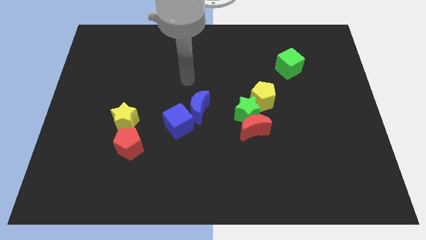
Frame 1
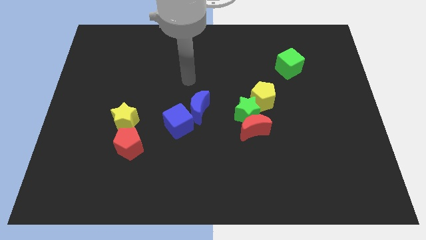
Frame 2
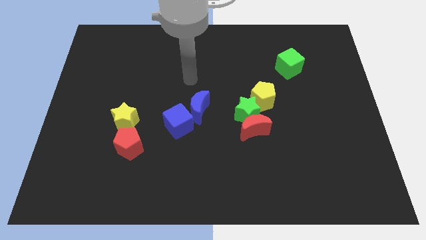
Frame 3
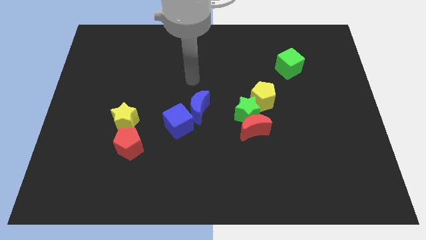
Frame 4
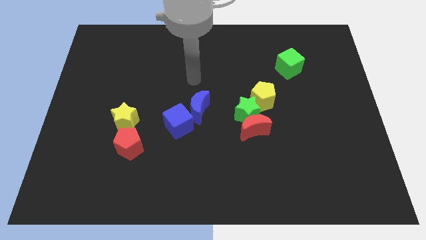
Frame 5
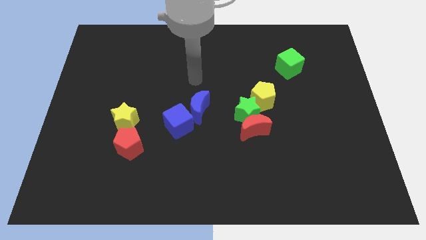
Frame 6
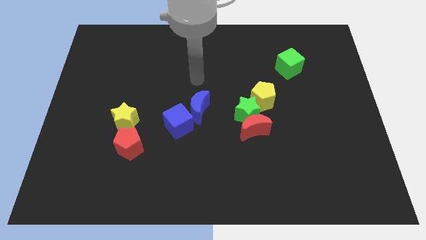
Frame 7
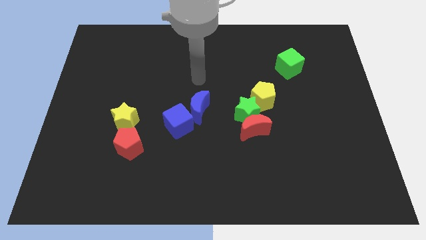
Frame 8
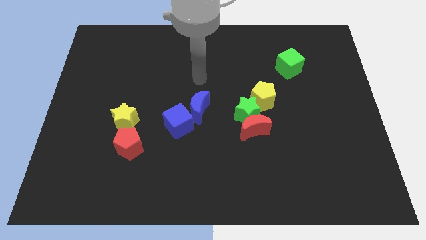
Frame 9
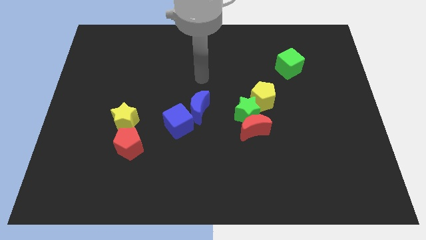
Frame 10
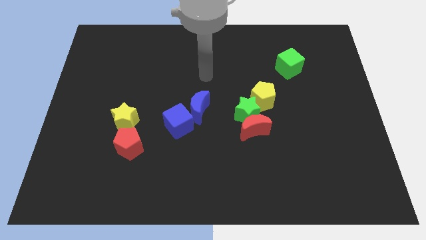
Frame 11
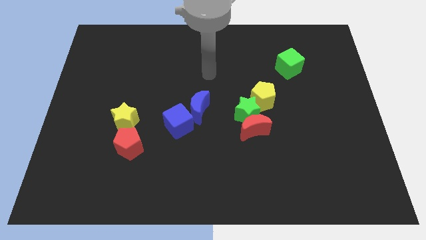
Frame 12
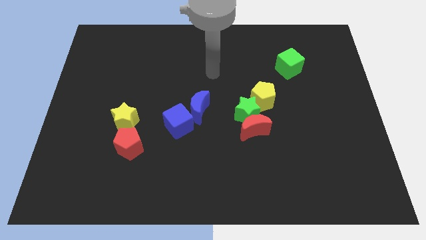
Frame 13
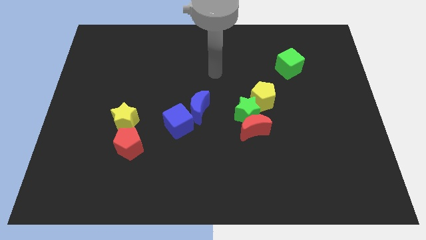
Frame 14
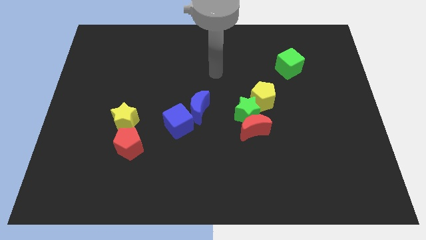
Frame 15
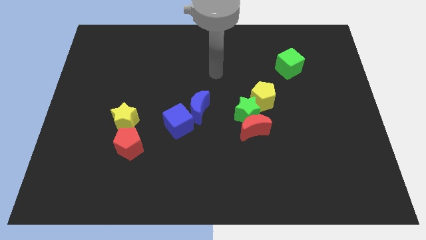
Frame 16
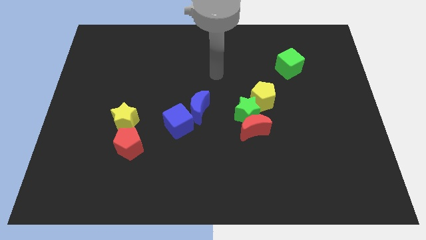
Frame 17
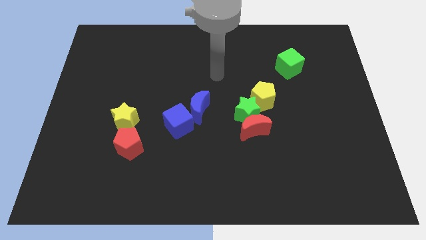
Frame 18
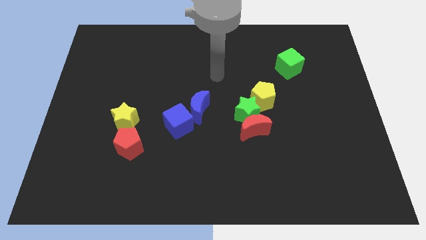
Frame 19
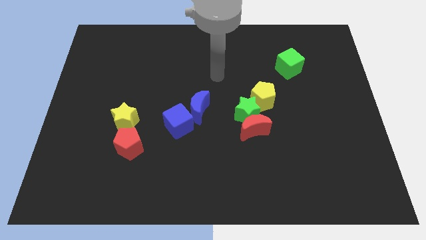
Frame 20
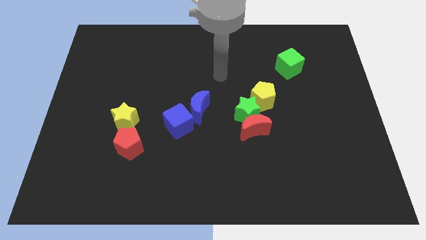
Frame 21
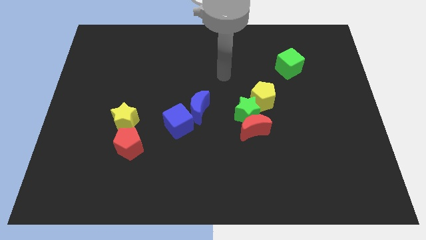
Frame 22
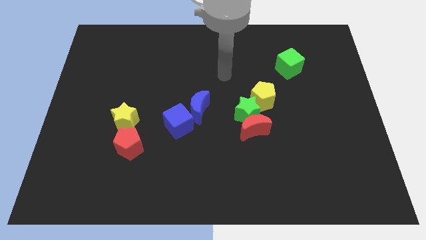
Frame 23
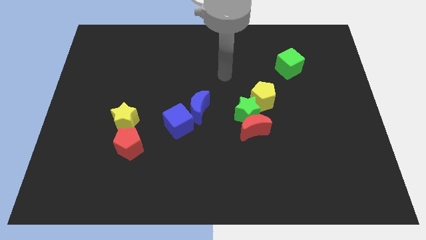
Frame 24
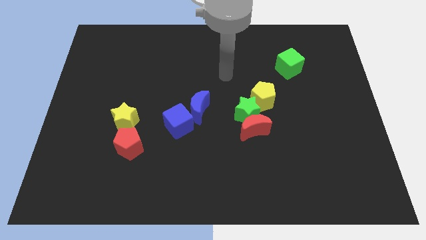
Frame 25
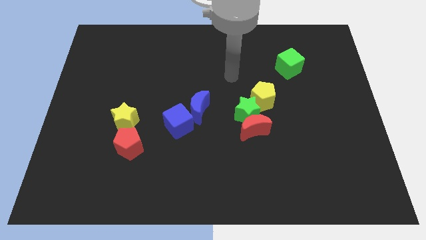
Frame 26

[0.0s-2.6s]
move robot arm towards right side

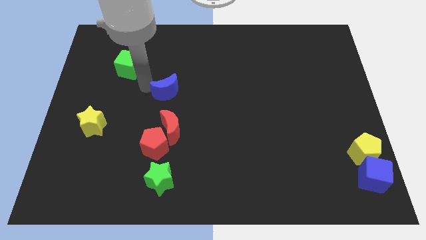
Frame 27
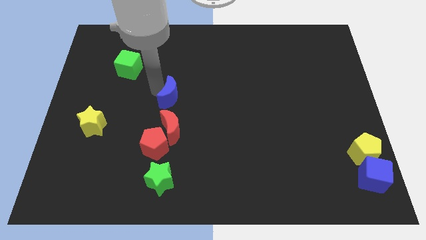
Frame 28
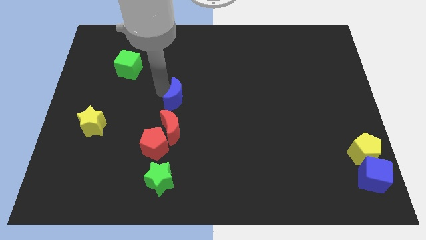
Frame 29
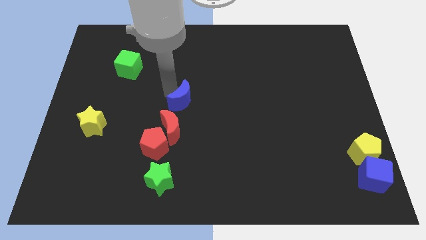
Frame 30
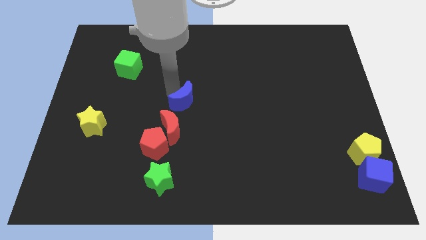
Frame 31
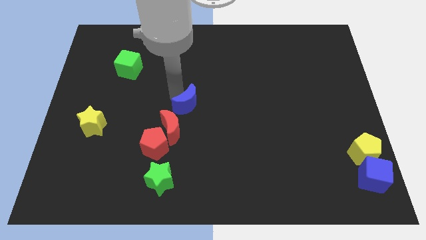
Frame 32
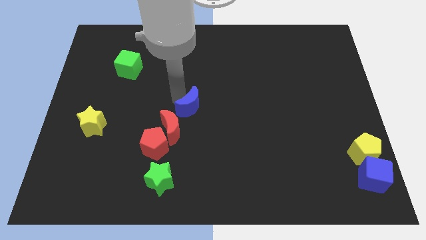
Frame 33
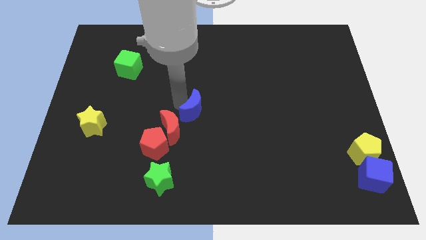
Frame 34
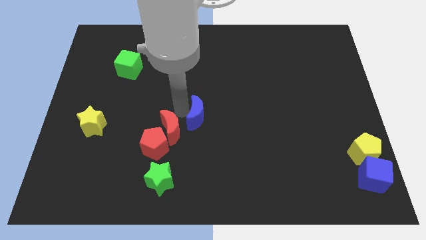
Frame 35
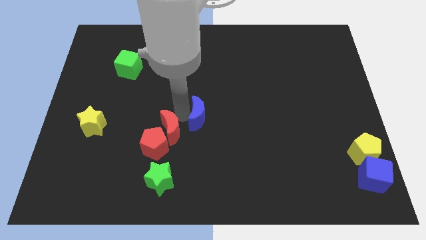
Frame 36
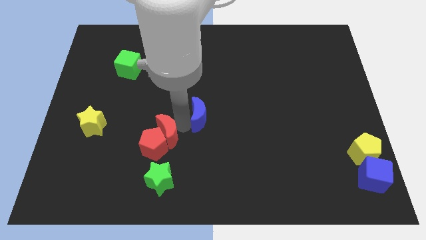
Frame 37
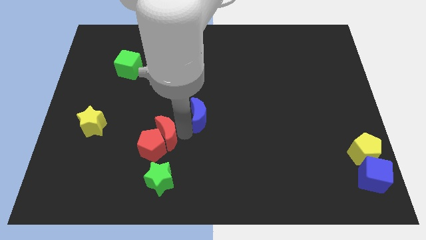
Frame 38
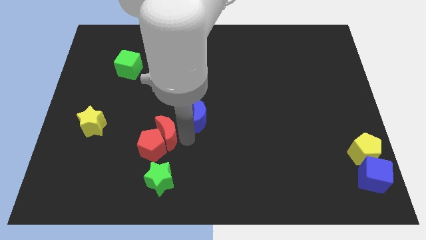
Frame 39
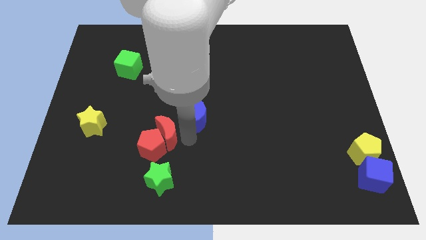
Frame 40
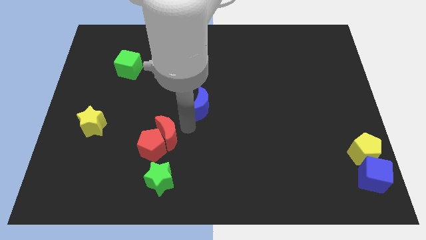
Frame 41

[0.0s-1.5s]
place blue crescent right to red crescent

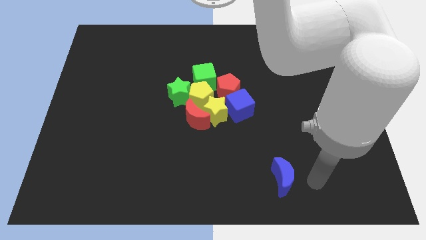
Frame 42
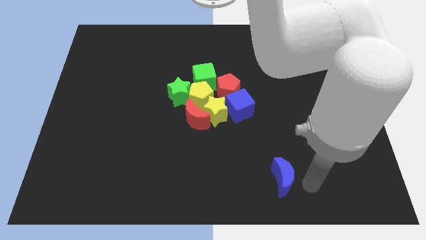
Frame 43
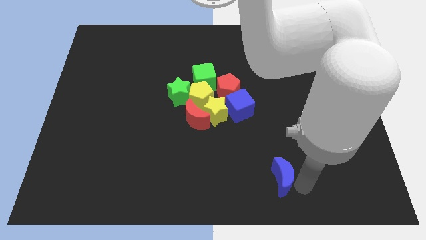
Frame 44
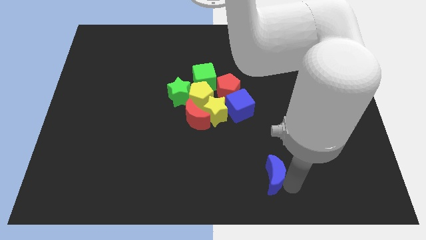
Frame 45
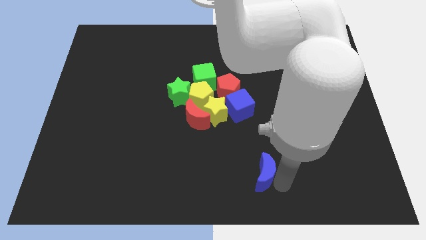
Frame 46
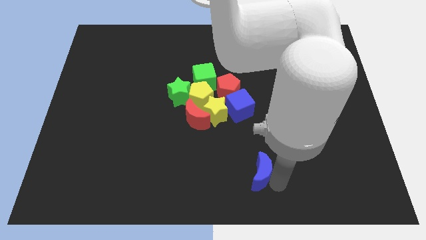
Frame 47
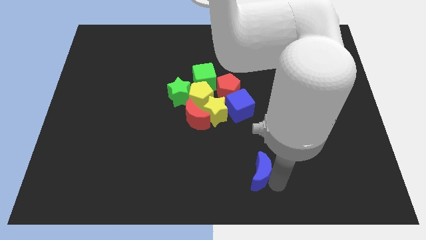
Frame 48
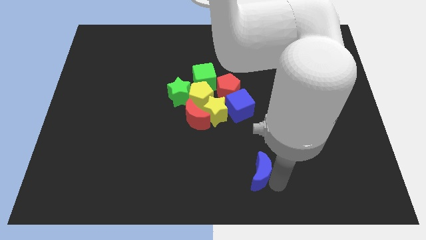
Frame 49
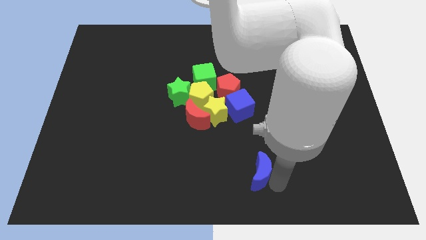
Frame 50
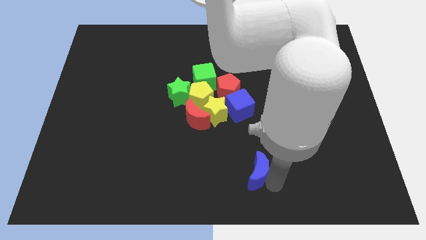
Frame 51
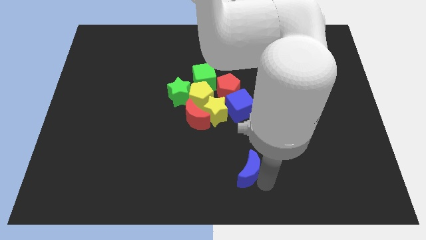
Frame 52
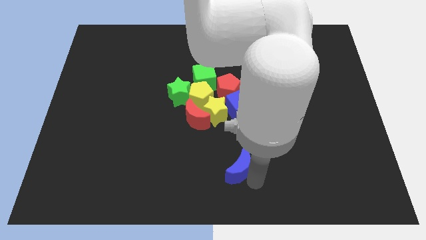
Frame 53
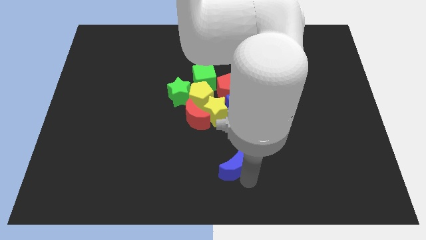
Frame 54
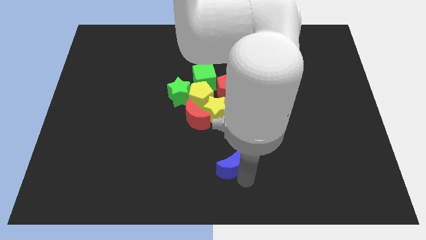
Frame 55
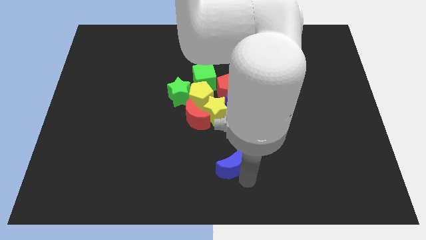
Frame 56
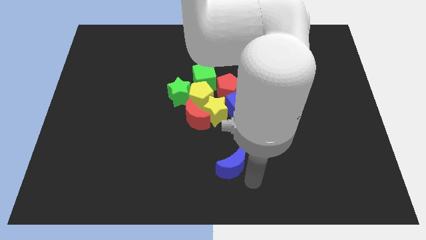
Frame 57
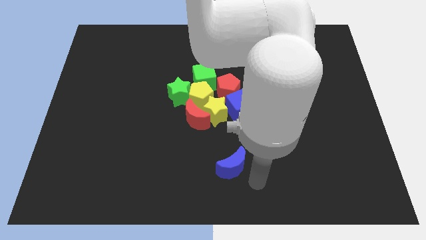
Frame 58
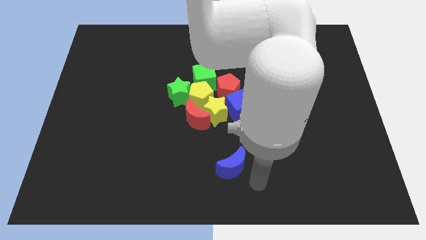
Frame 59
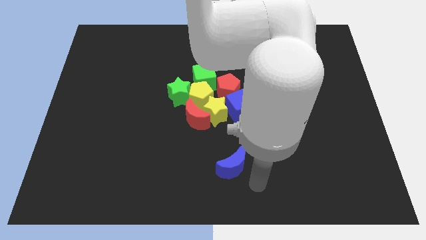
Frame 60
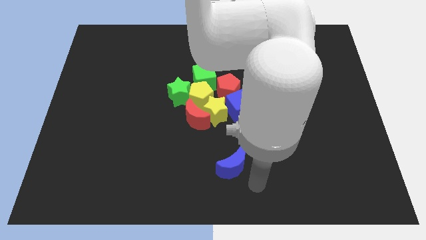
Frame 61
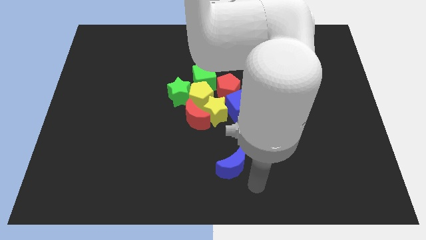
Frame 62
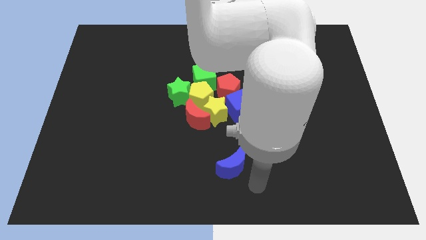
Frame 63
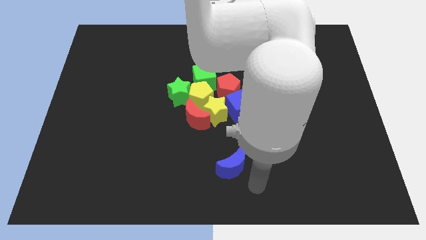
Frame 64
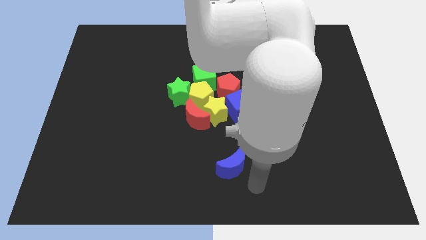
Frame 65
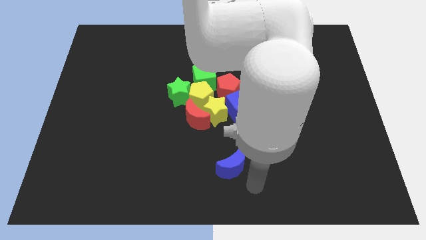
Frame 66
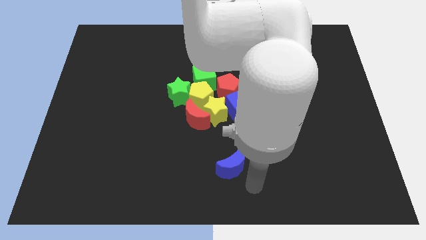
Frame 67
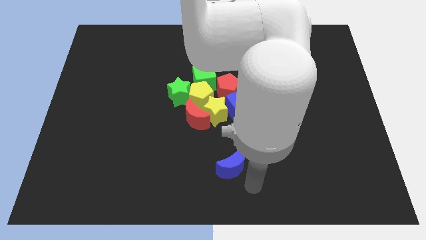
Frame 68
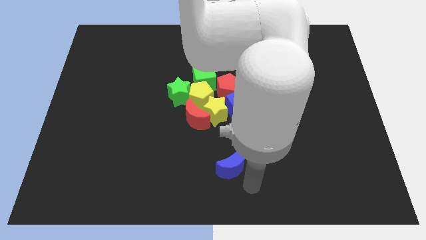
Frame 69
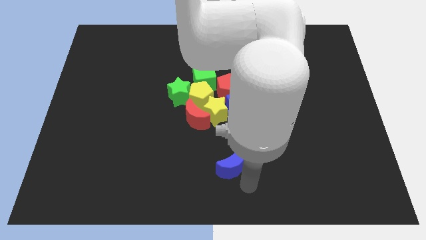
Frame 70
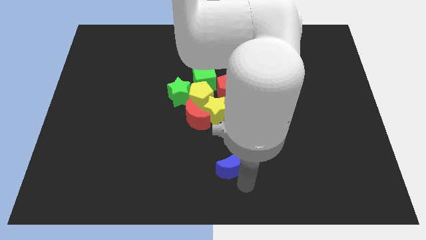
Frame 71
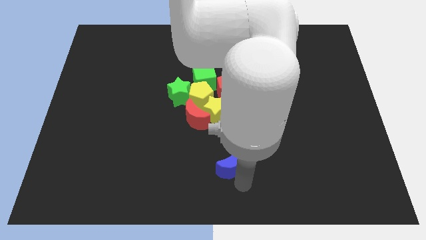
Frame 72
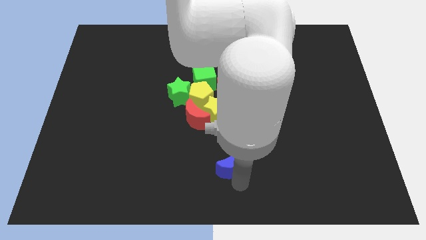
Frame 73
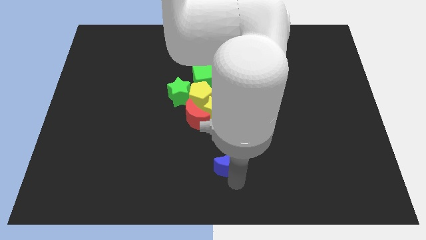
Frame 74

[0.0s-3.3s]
move the blue crescent vertically ti the bottom of the yellow star

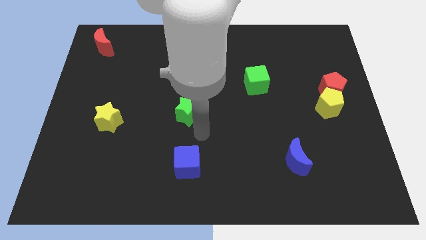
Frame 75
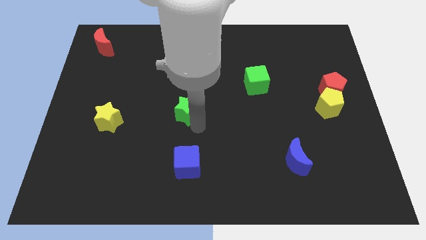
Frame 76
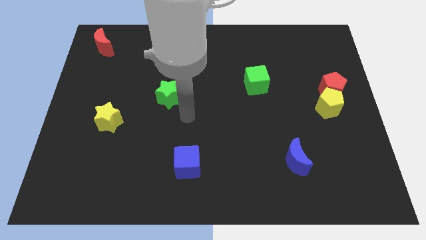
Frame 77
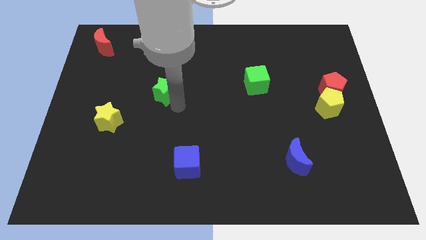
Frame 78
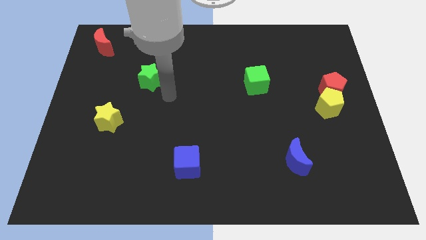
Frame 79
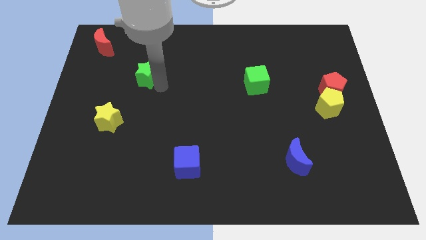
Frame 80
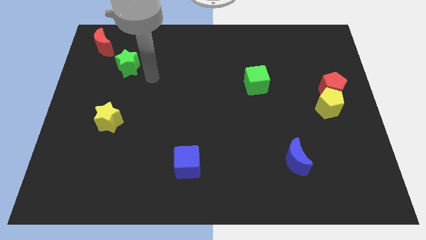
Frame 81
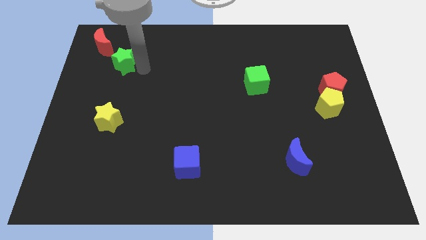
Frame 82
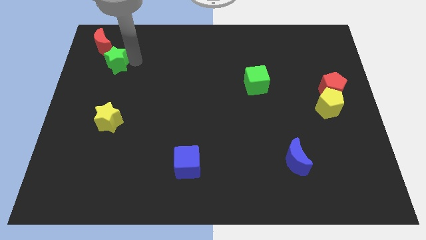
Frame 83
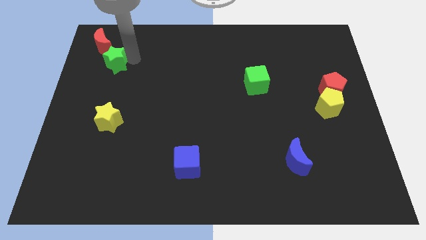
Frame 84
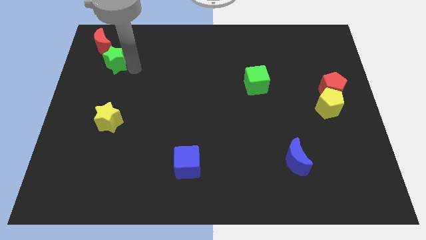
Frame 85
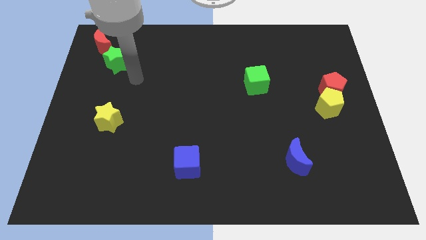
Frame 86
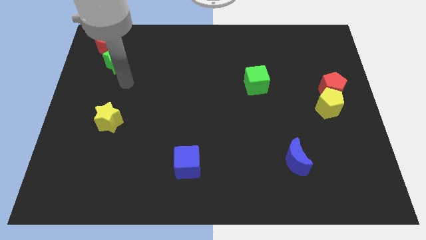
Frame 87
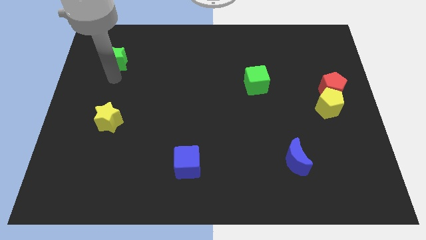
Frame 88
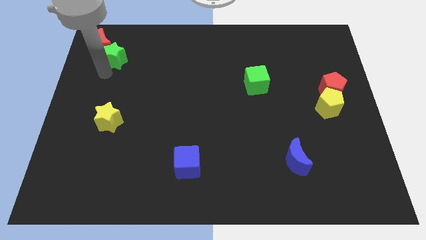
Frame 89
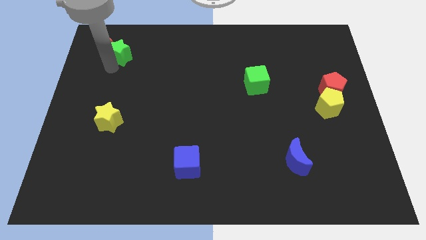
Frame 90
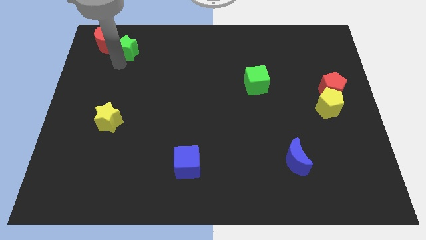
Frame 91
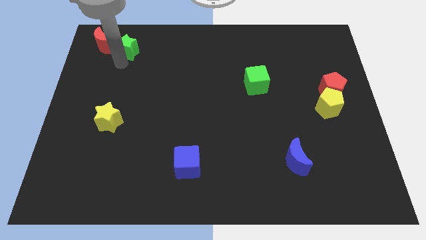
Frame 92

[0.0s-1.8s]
move the green star below red moon diagonally right
